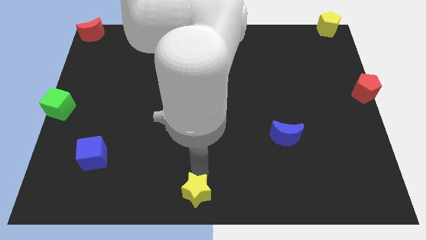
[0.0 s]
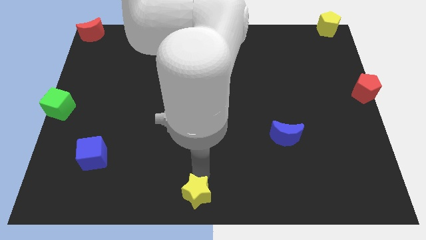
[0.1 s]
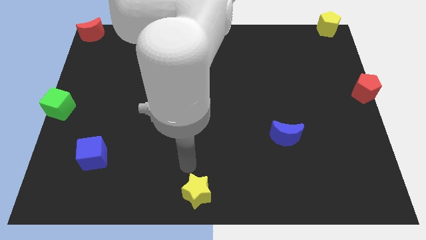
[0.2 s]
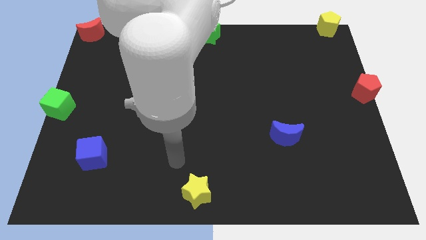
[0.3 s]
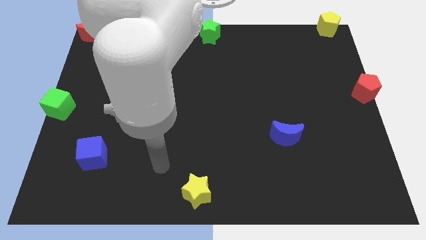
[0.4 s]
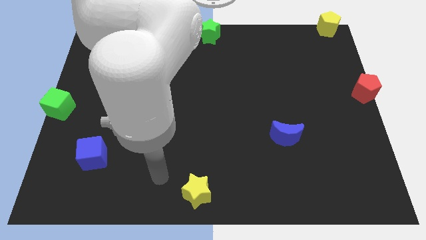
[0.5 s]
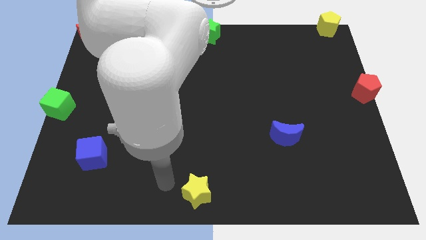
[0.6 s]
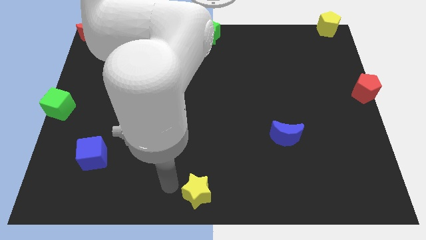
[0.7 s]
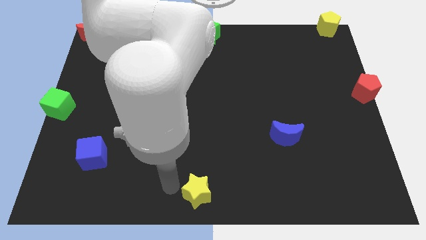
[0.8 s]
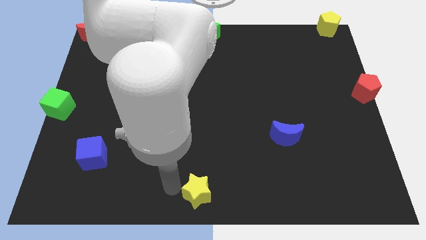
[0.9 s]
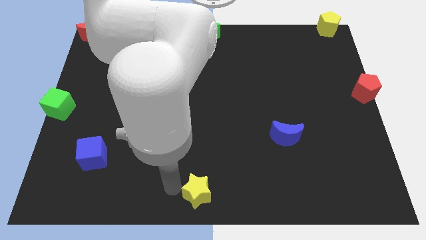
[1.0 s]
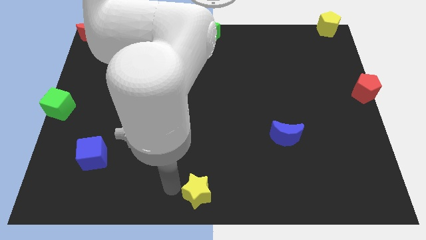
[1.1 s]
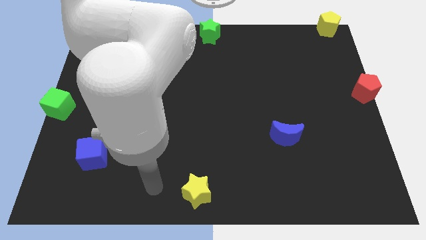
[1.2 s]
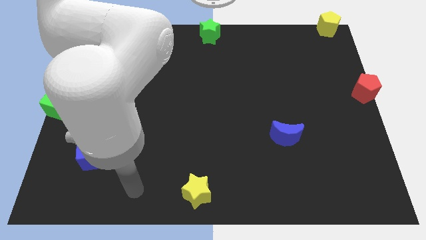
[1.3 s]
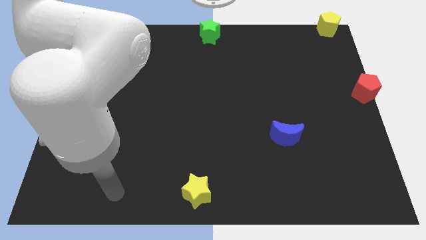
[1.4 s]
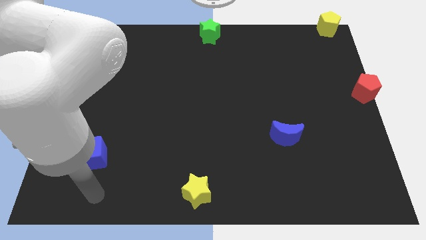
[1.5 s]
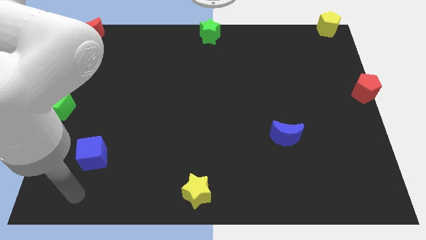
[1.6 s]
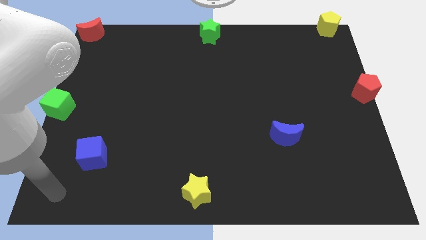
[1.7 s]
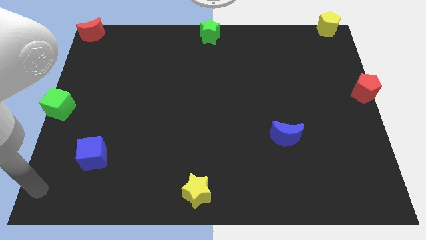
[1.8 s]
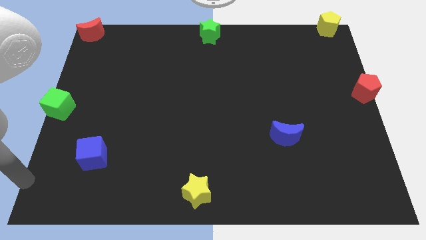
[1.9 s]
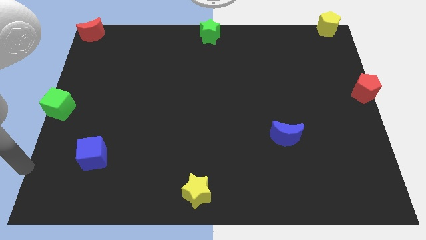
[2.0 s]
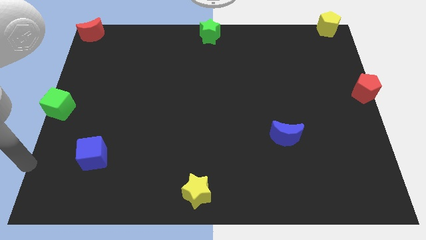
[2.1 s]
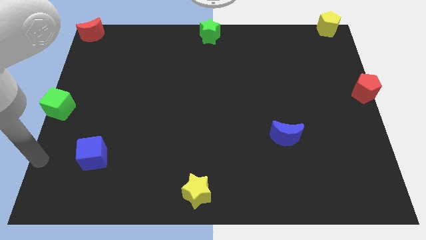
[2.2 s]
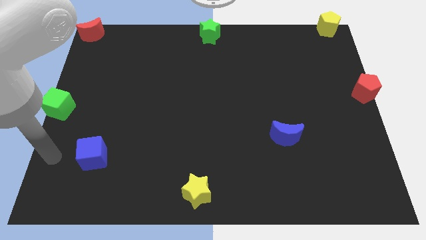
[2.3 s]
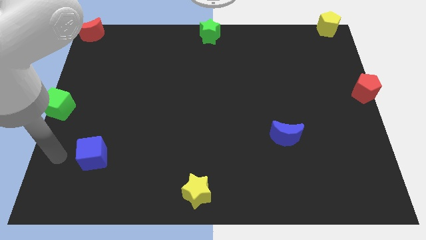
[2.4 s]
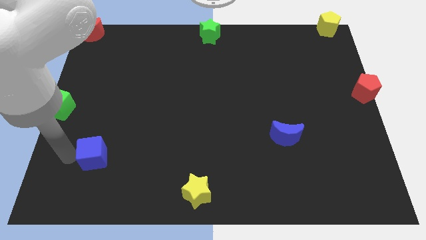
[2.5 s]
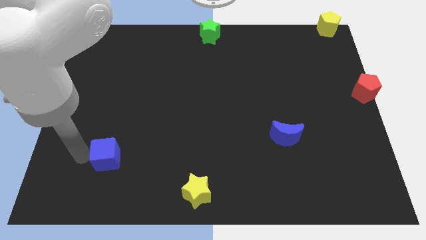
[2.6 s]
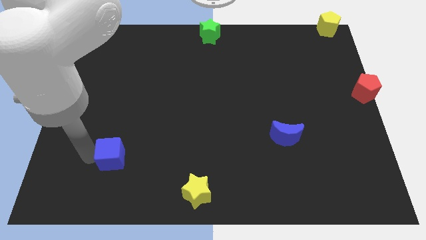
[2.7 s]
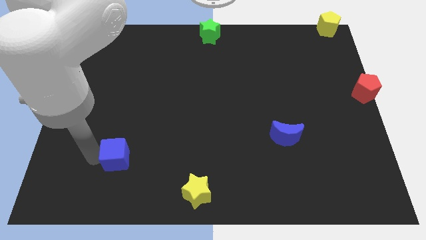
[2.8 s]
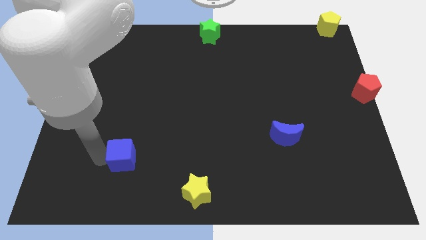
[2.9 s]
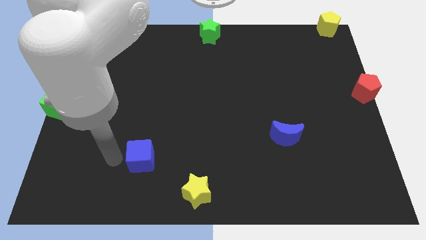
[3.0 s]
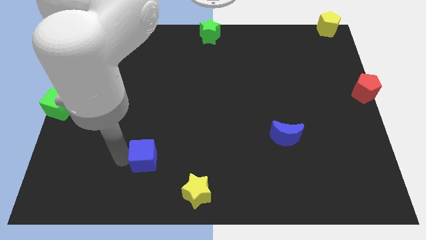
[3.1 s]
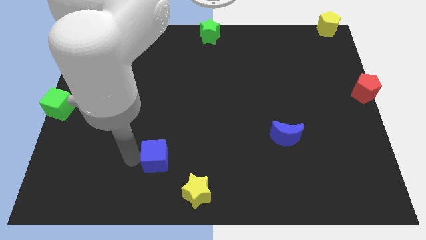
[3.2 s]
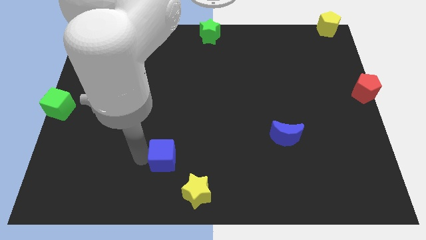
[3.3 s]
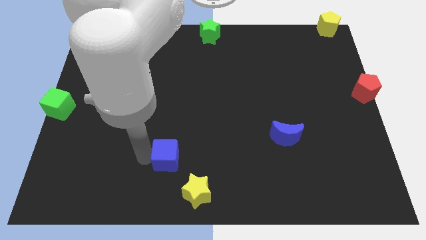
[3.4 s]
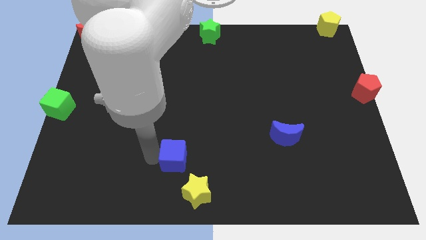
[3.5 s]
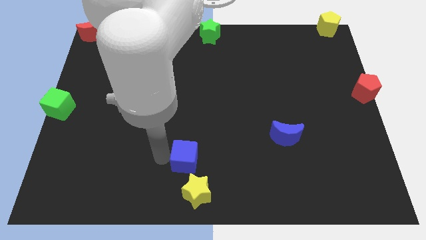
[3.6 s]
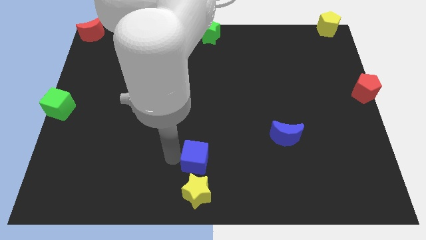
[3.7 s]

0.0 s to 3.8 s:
place the blue cube above the yellow star

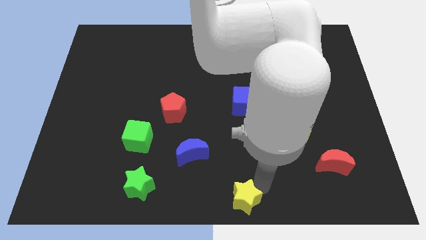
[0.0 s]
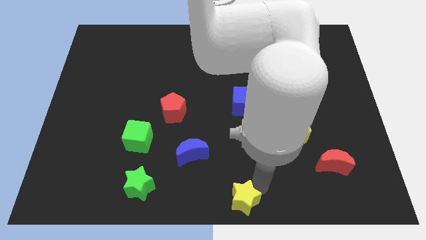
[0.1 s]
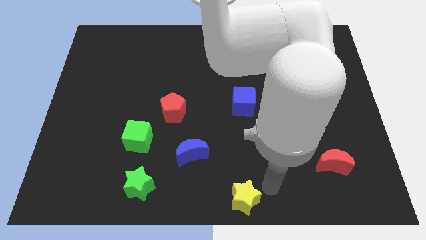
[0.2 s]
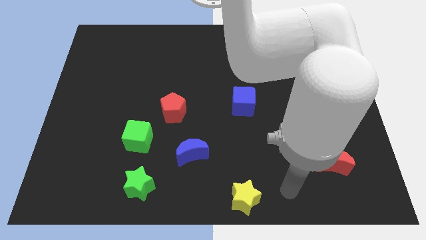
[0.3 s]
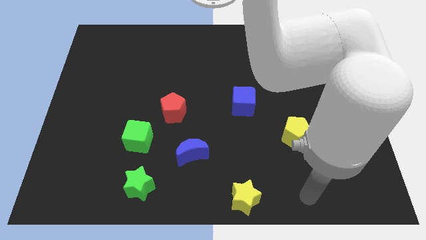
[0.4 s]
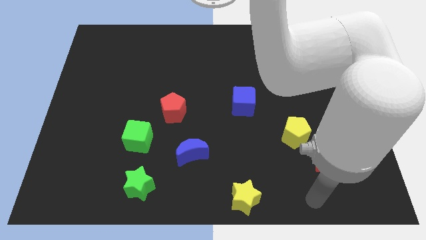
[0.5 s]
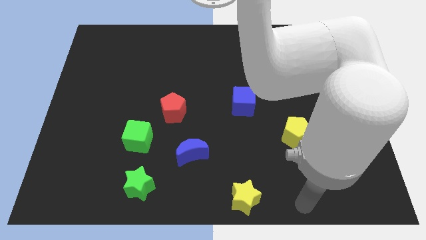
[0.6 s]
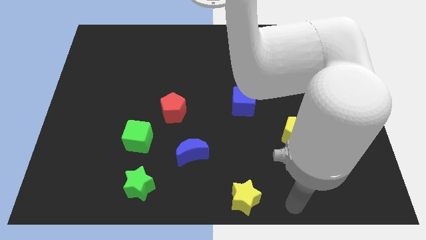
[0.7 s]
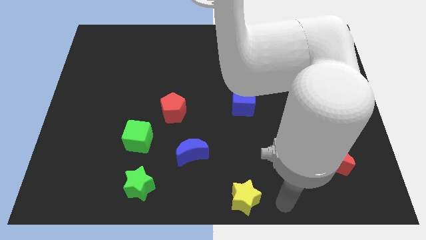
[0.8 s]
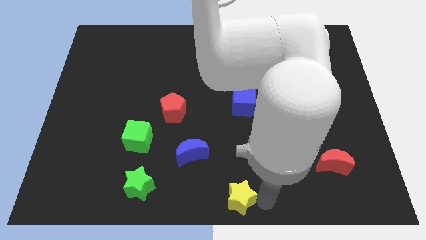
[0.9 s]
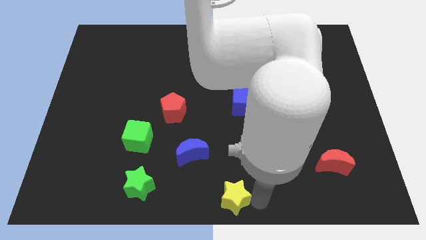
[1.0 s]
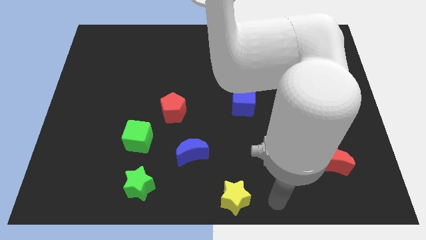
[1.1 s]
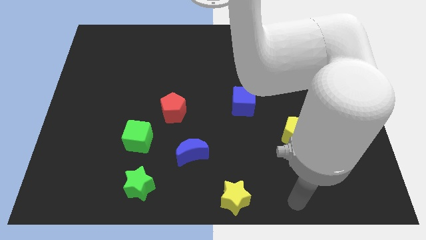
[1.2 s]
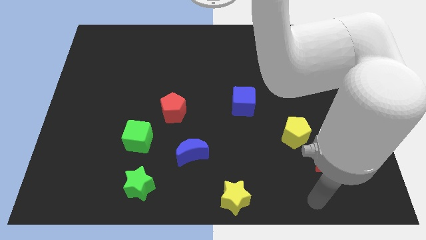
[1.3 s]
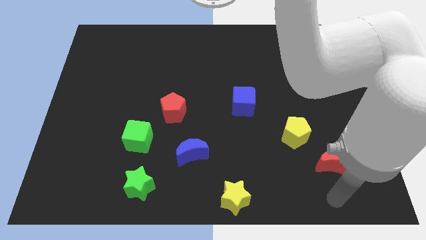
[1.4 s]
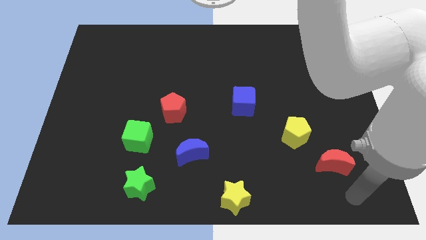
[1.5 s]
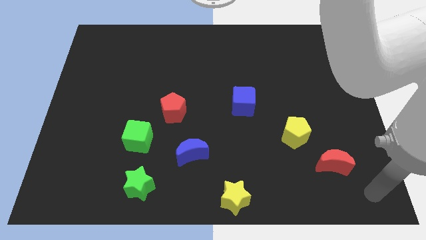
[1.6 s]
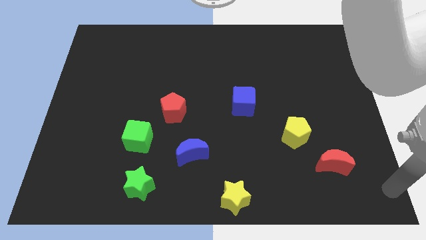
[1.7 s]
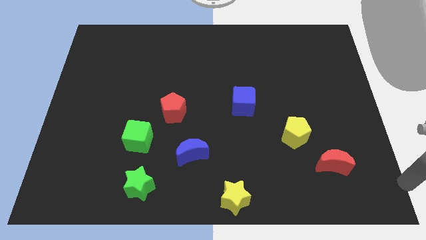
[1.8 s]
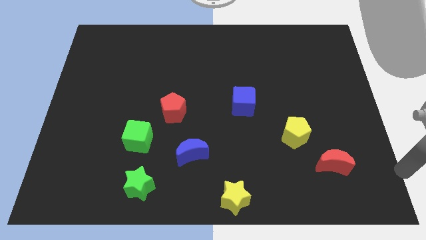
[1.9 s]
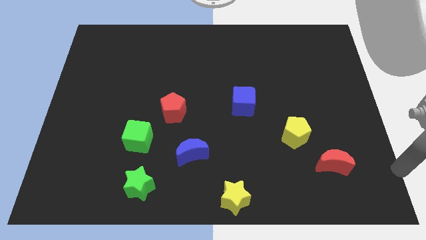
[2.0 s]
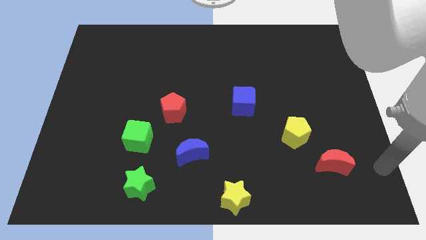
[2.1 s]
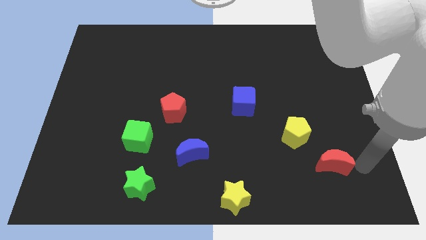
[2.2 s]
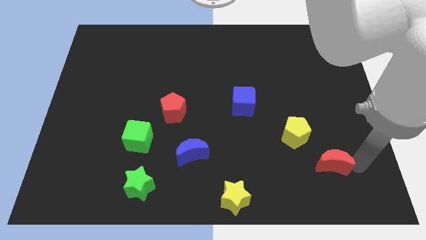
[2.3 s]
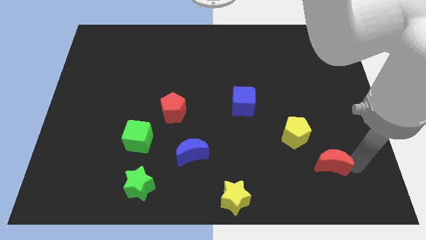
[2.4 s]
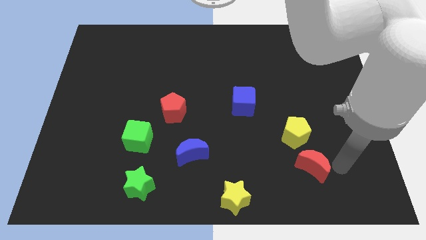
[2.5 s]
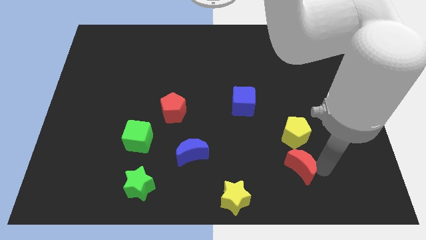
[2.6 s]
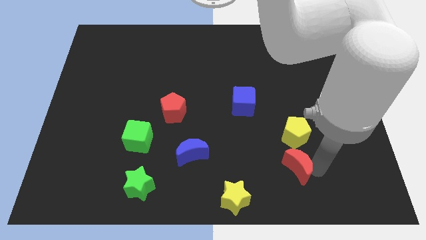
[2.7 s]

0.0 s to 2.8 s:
place red moon below yellow pentagon

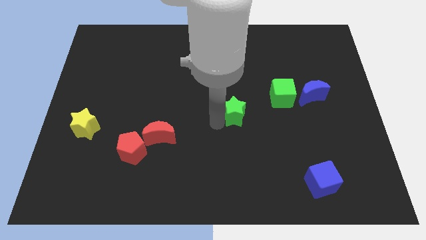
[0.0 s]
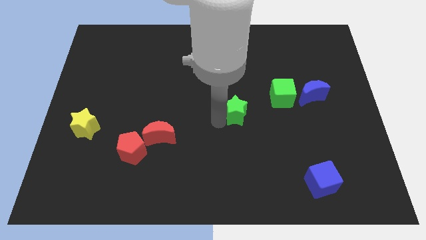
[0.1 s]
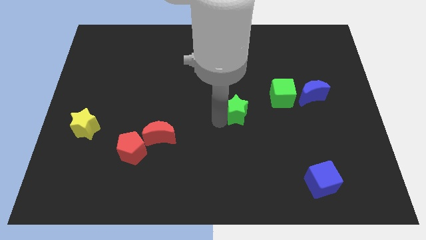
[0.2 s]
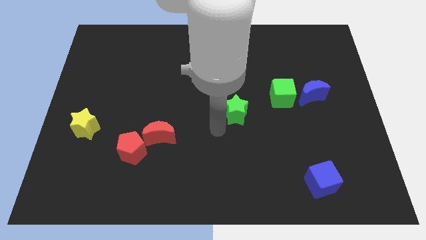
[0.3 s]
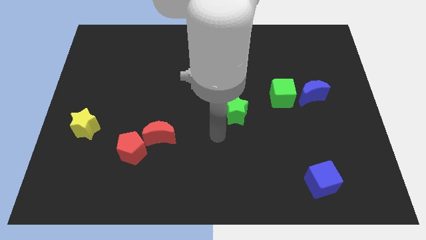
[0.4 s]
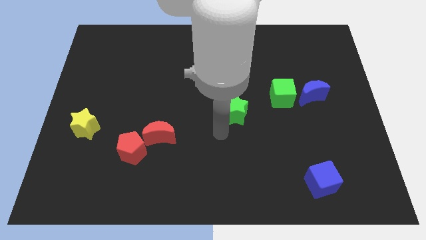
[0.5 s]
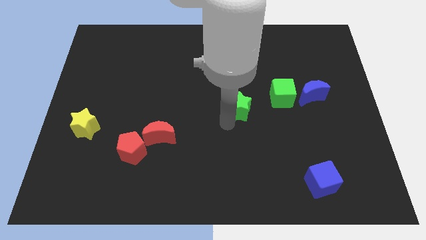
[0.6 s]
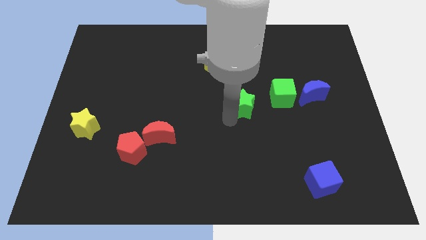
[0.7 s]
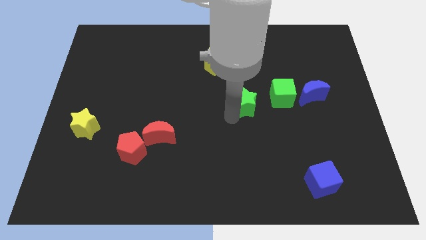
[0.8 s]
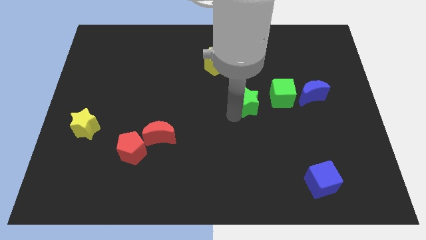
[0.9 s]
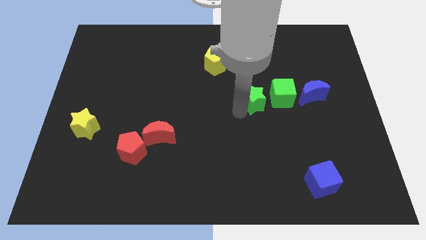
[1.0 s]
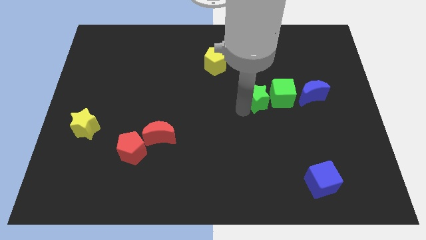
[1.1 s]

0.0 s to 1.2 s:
move the green star to the left of the green cube

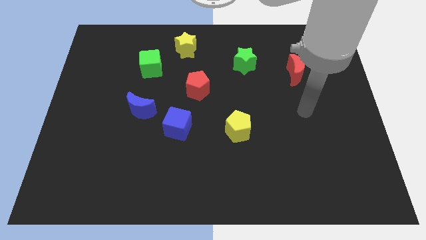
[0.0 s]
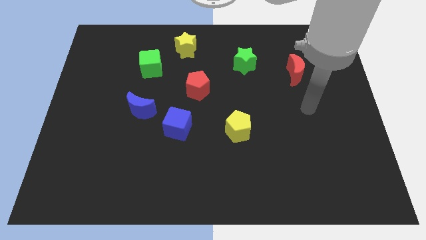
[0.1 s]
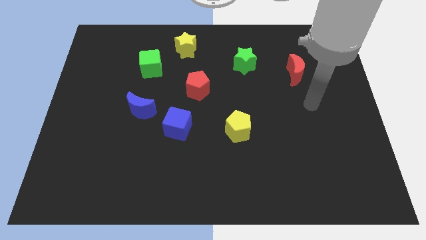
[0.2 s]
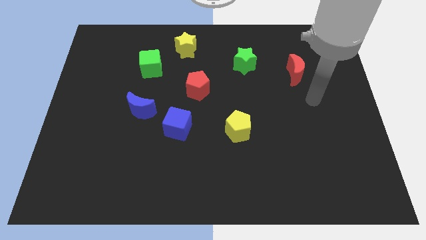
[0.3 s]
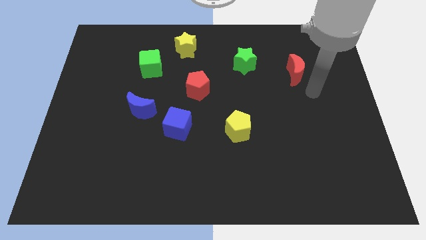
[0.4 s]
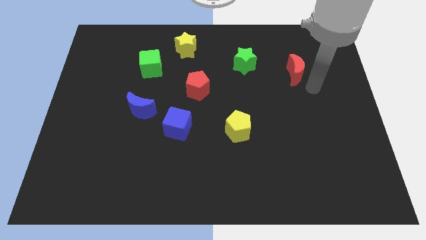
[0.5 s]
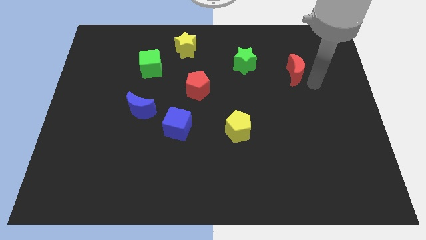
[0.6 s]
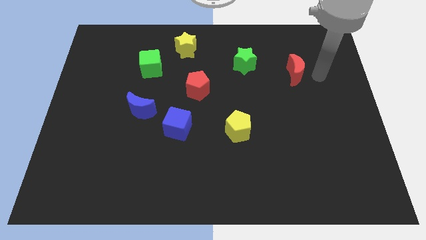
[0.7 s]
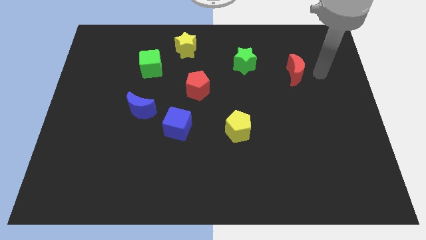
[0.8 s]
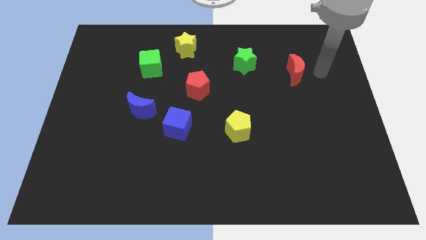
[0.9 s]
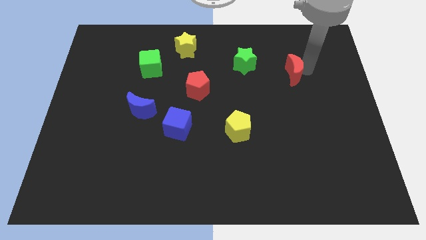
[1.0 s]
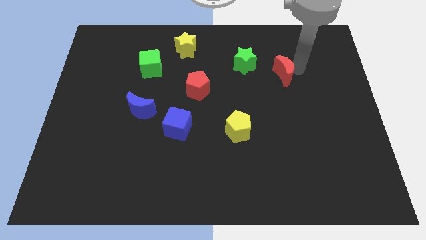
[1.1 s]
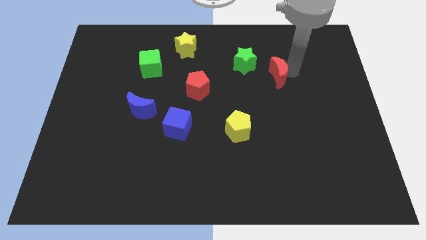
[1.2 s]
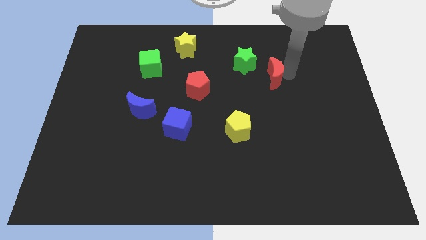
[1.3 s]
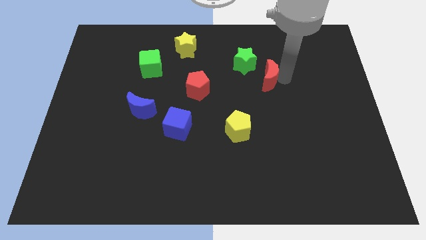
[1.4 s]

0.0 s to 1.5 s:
push red moon towards green star
